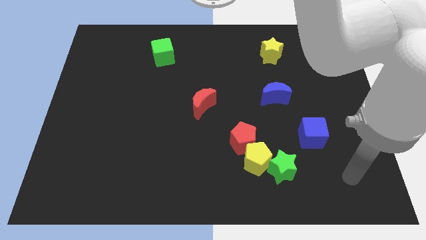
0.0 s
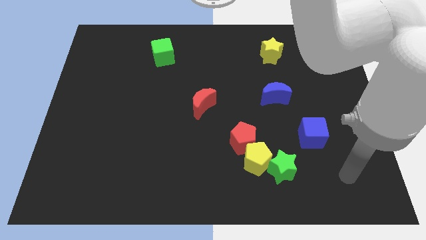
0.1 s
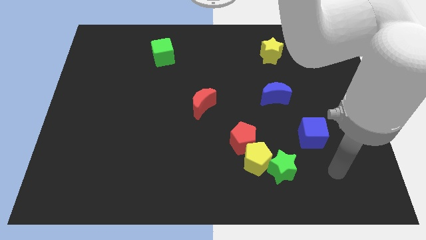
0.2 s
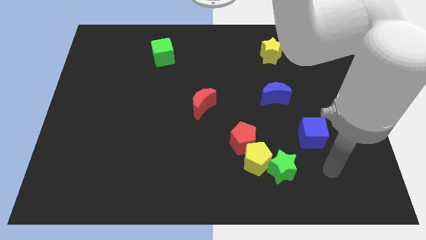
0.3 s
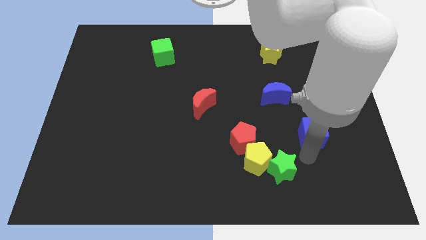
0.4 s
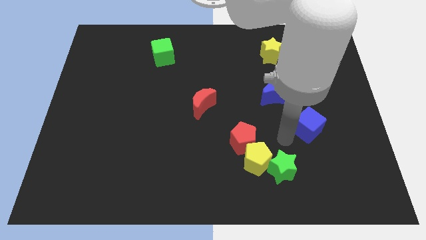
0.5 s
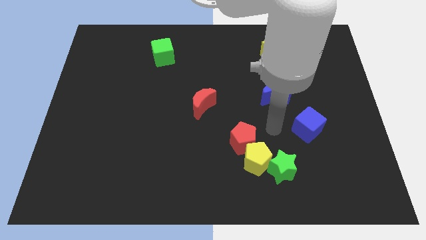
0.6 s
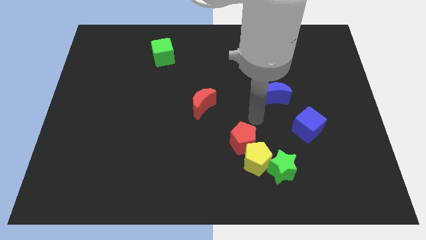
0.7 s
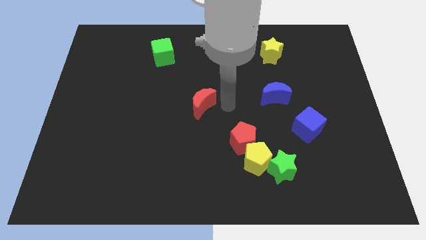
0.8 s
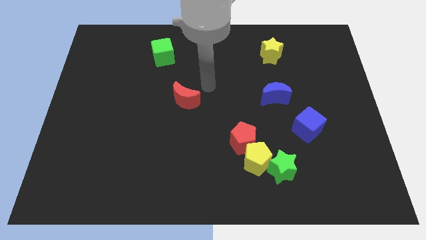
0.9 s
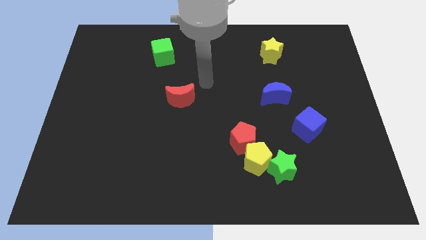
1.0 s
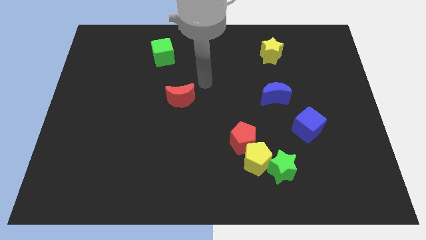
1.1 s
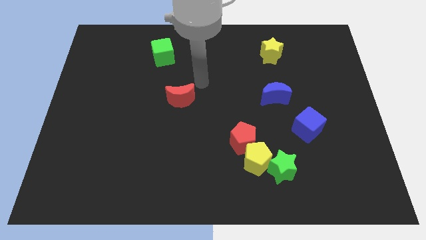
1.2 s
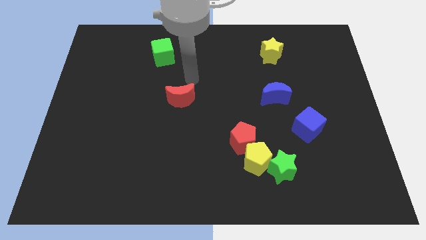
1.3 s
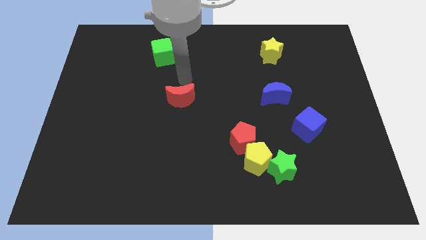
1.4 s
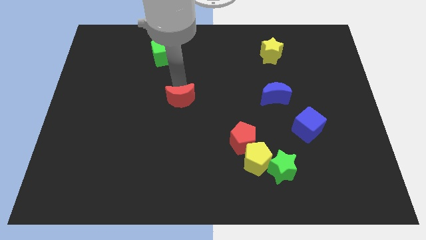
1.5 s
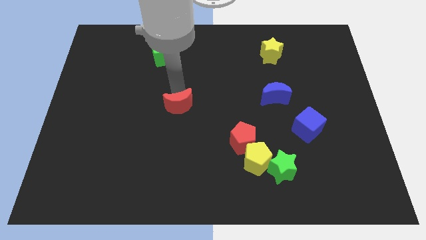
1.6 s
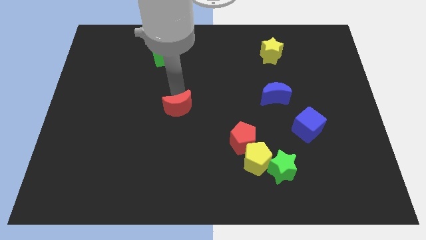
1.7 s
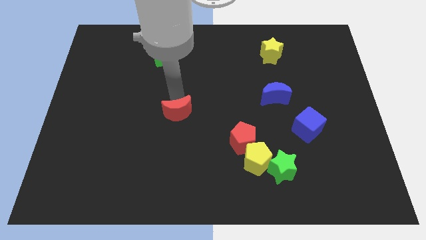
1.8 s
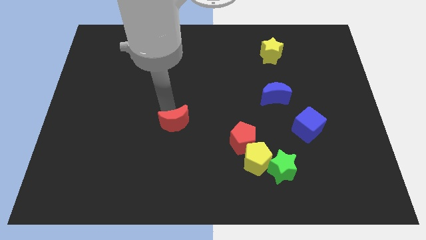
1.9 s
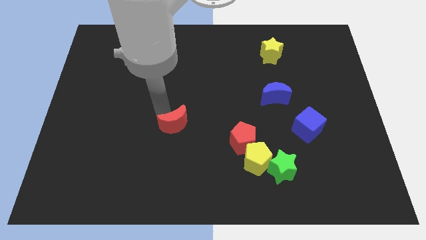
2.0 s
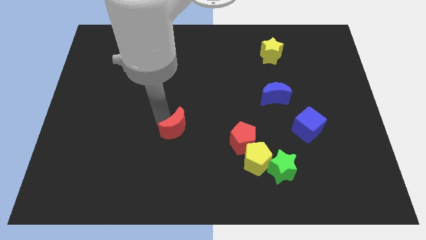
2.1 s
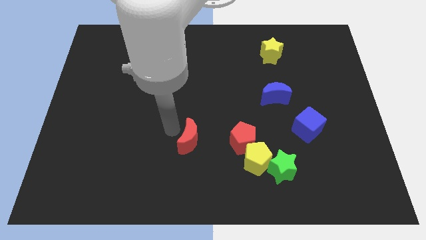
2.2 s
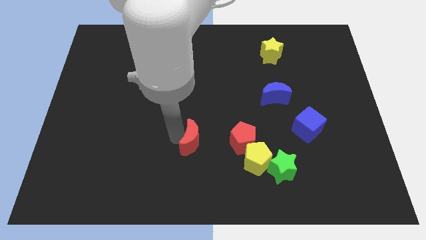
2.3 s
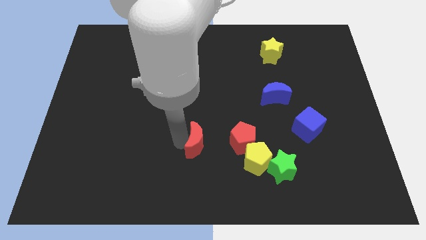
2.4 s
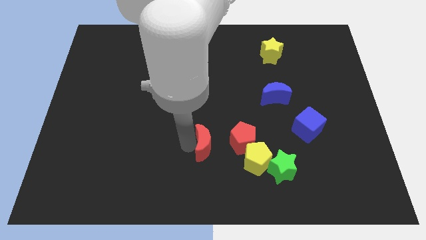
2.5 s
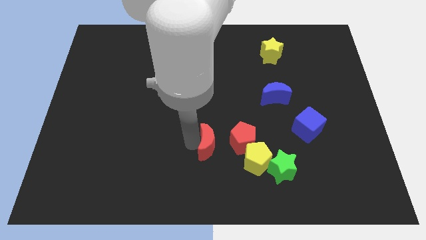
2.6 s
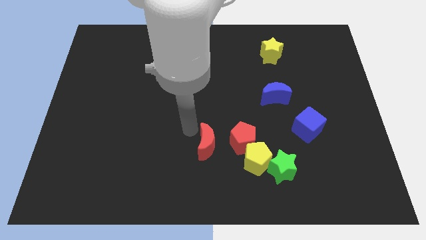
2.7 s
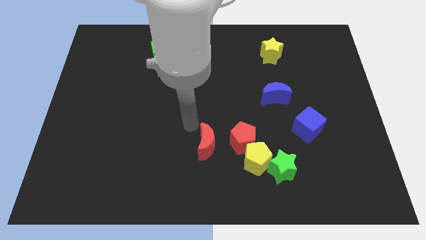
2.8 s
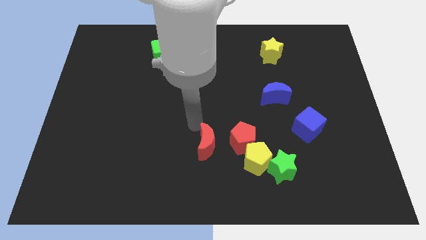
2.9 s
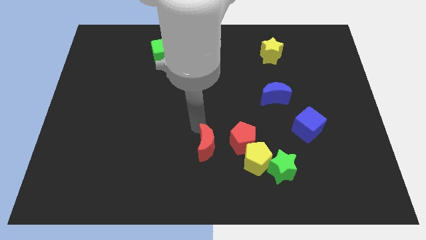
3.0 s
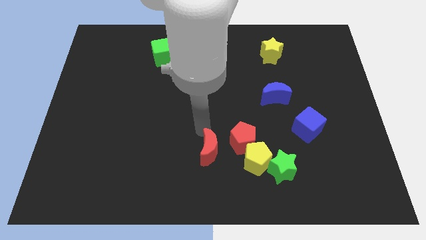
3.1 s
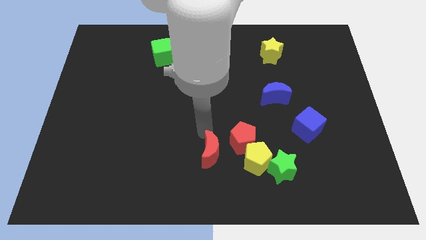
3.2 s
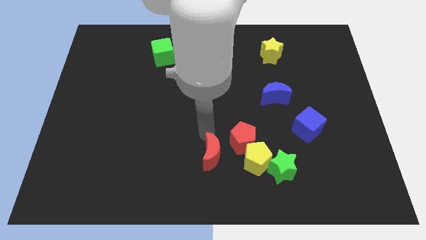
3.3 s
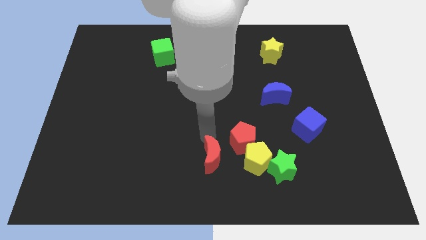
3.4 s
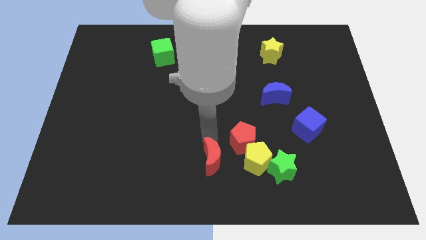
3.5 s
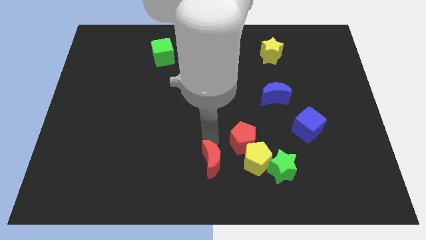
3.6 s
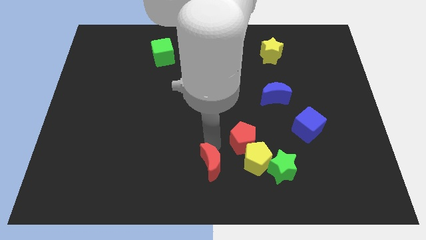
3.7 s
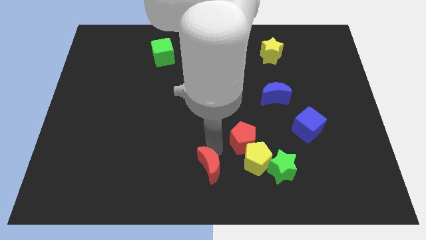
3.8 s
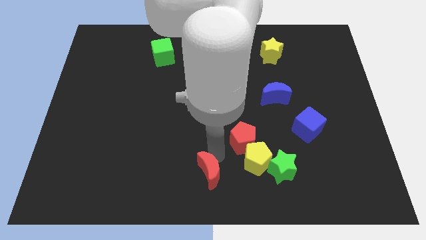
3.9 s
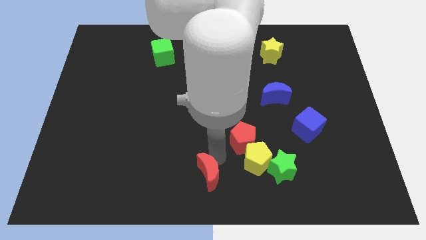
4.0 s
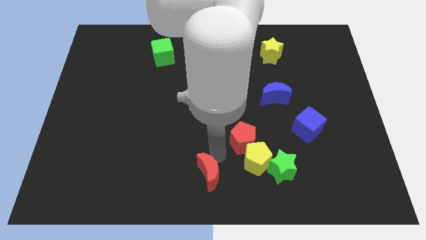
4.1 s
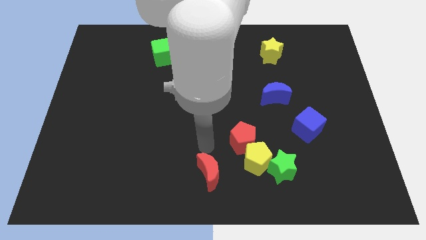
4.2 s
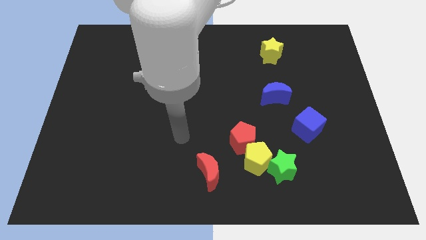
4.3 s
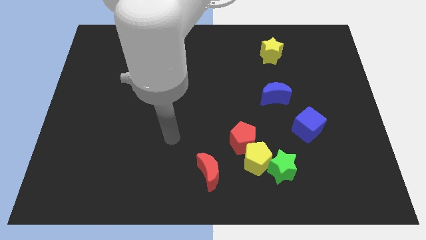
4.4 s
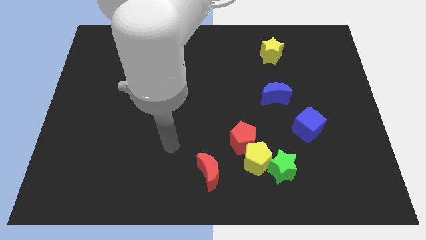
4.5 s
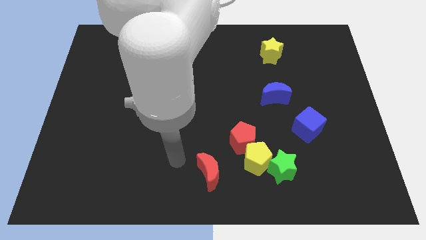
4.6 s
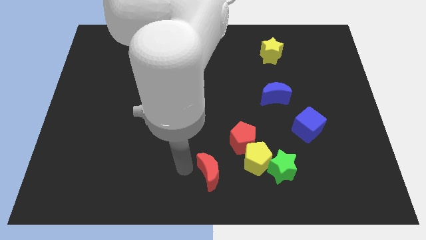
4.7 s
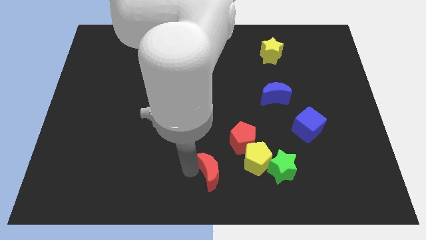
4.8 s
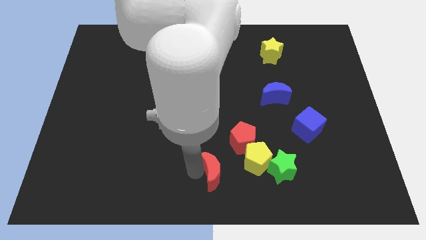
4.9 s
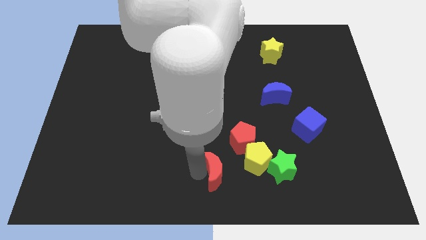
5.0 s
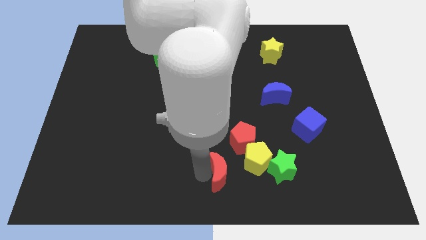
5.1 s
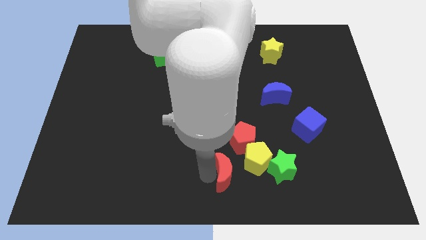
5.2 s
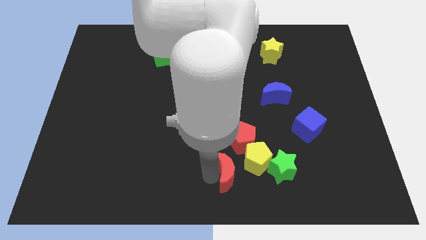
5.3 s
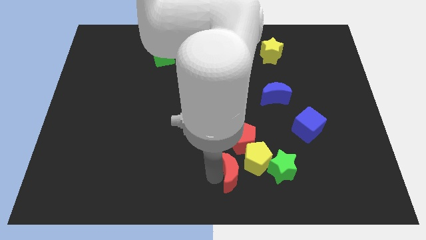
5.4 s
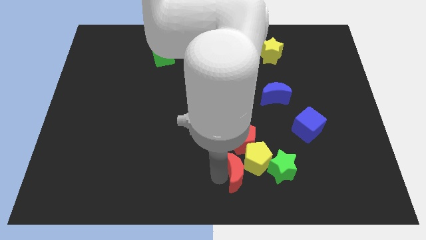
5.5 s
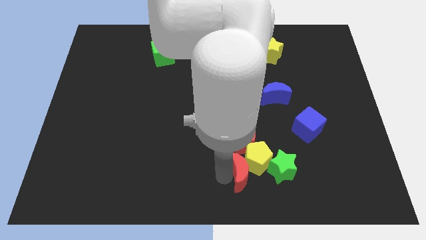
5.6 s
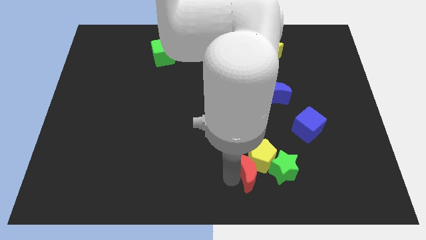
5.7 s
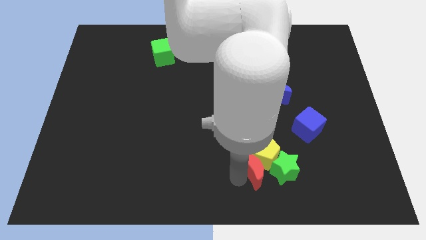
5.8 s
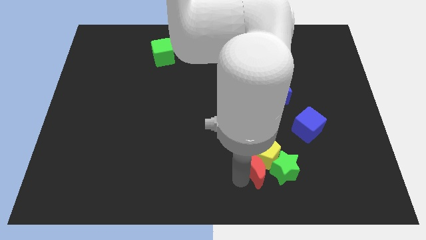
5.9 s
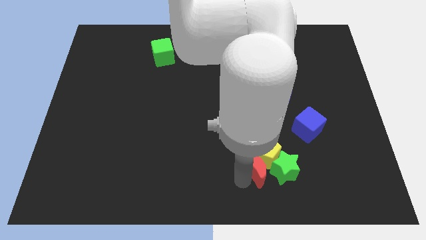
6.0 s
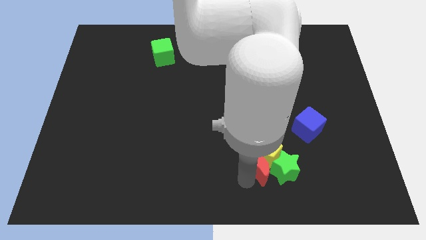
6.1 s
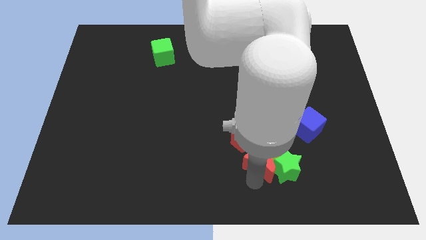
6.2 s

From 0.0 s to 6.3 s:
slide the red moon close to the green star

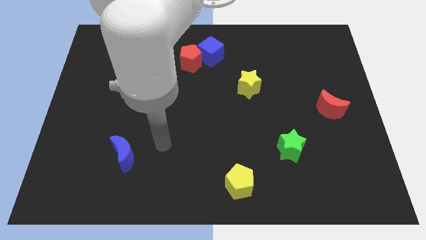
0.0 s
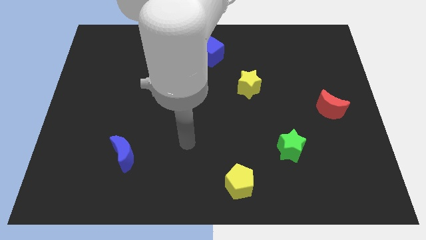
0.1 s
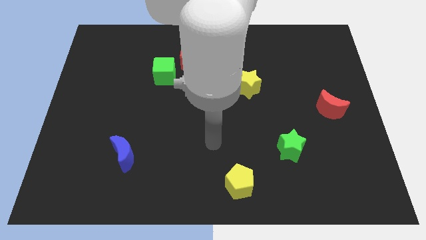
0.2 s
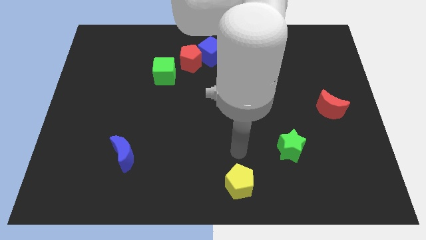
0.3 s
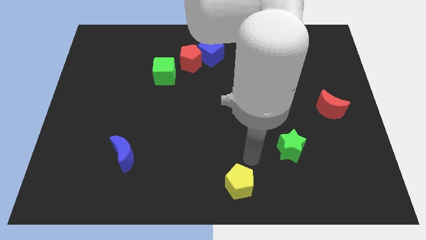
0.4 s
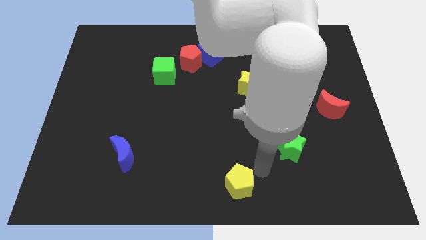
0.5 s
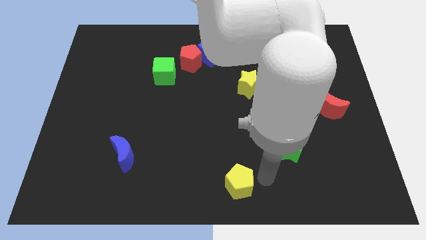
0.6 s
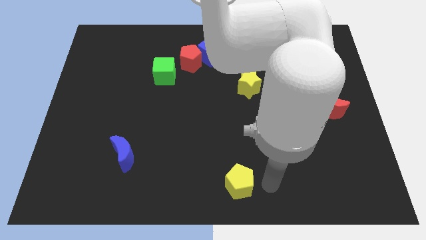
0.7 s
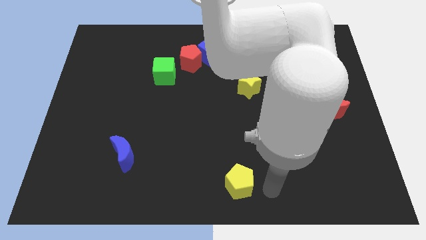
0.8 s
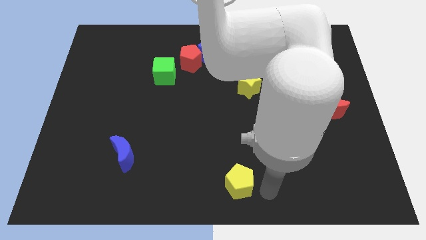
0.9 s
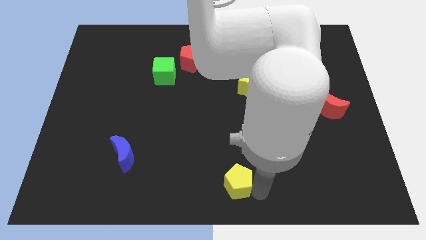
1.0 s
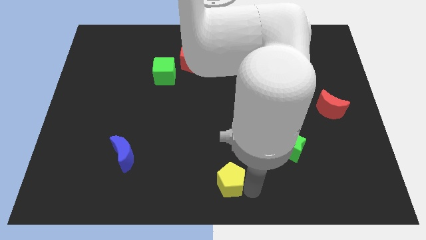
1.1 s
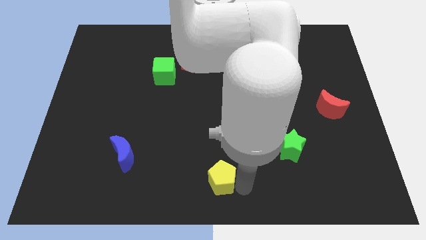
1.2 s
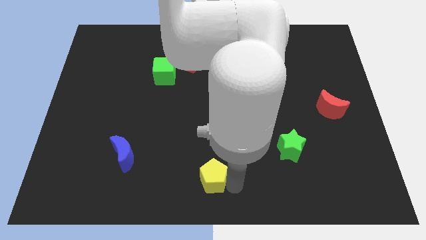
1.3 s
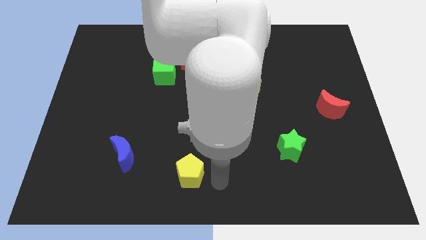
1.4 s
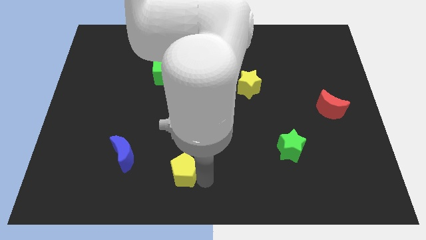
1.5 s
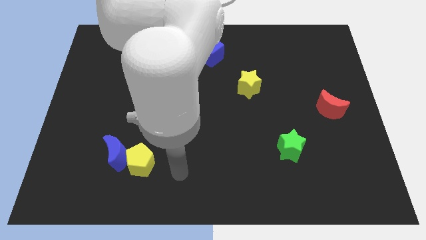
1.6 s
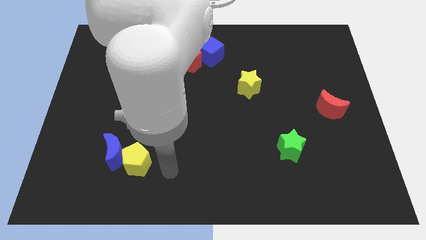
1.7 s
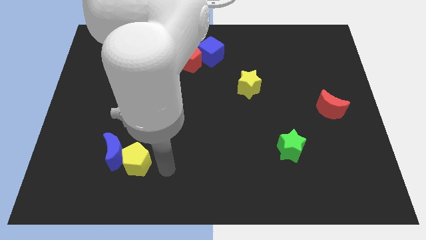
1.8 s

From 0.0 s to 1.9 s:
move the yellow pentagon to the blue moon

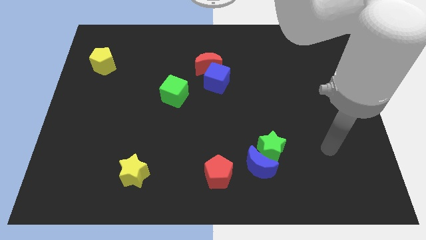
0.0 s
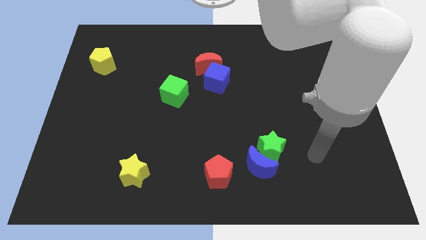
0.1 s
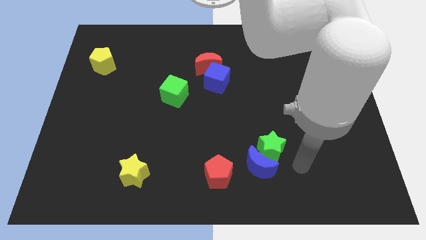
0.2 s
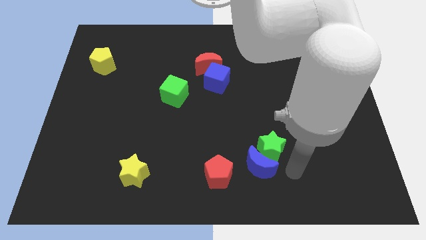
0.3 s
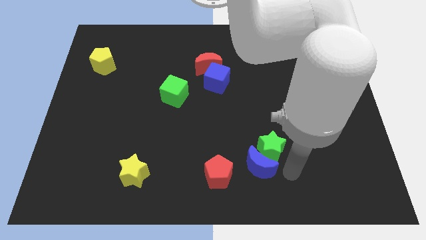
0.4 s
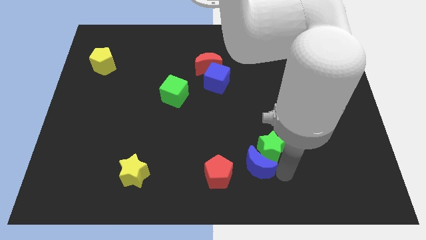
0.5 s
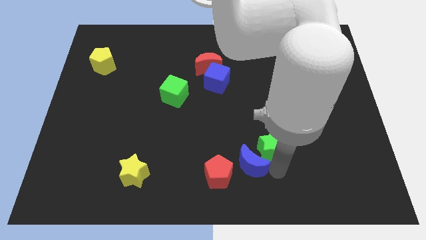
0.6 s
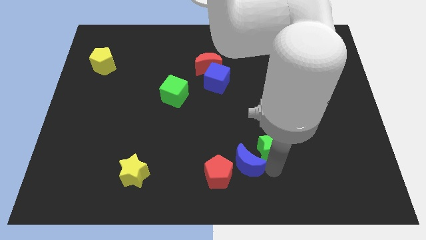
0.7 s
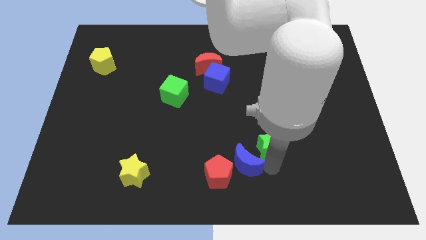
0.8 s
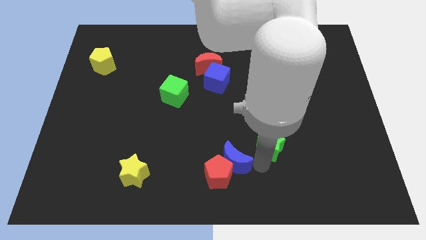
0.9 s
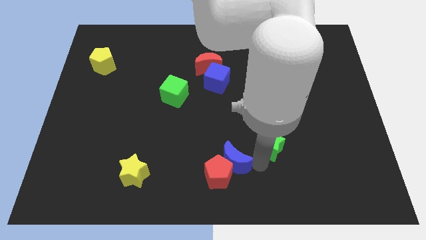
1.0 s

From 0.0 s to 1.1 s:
slide the blue moon to the red pentagon
